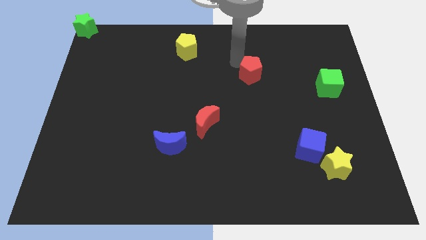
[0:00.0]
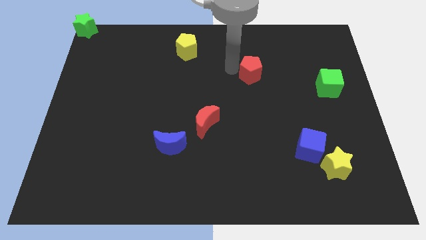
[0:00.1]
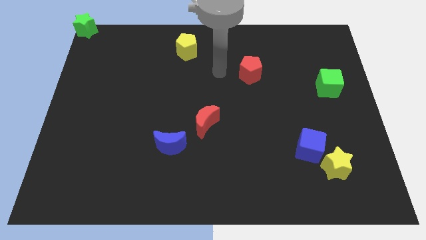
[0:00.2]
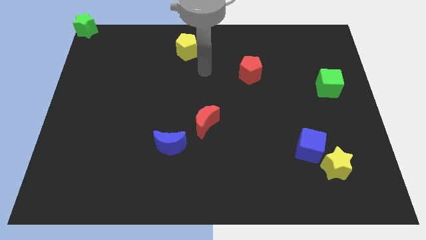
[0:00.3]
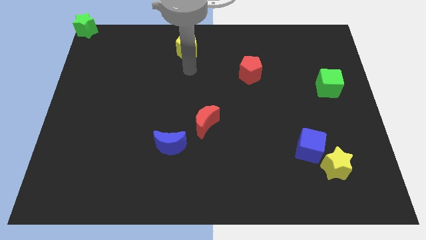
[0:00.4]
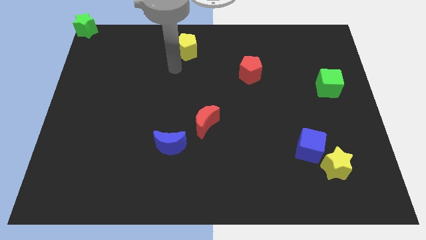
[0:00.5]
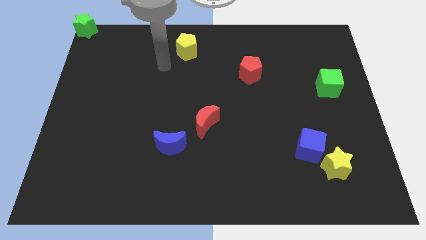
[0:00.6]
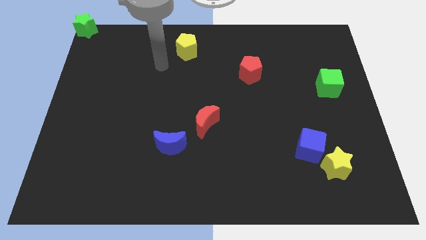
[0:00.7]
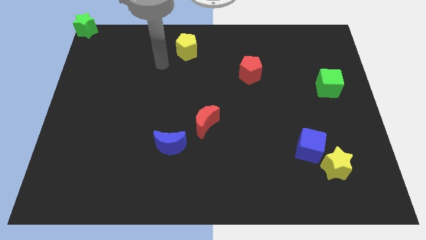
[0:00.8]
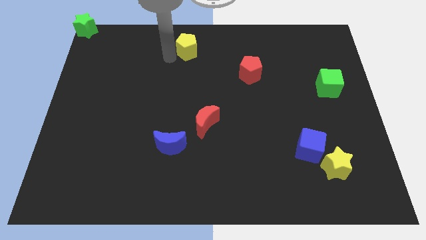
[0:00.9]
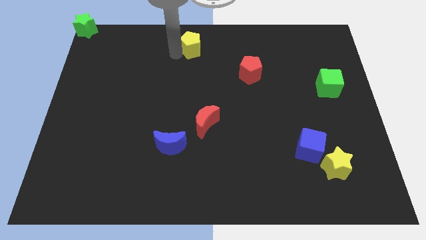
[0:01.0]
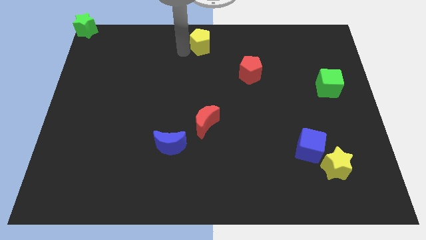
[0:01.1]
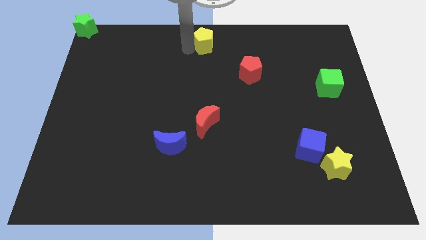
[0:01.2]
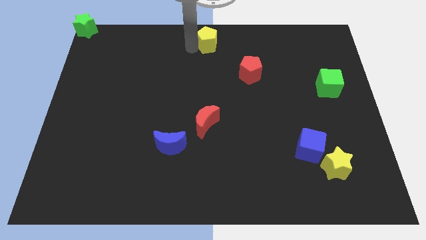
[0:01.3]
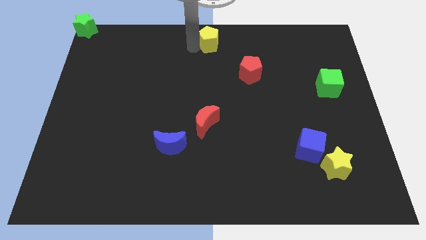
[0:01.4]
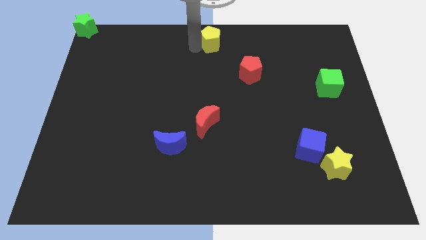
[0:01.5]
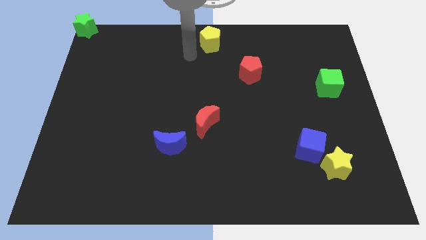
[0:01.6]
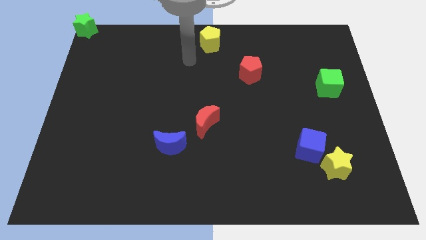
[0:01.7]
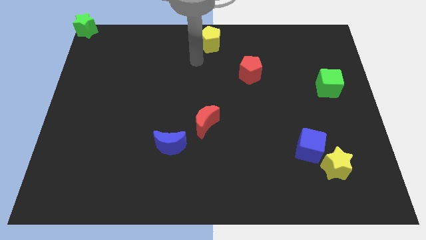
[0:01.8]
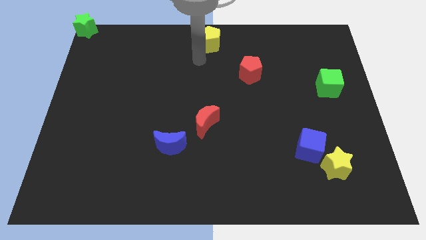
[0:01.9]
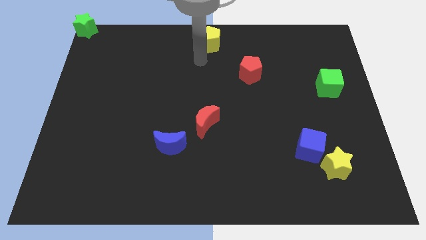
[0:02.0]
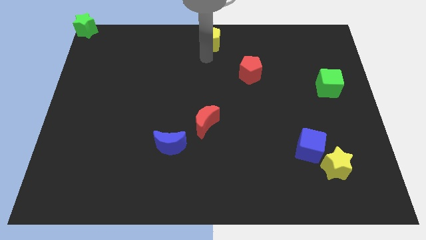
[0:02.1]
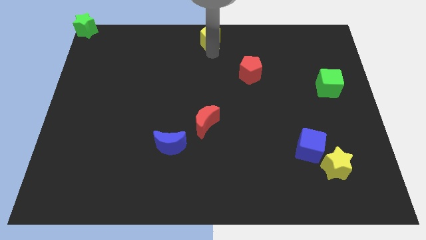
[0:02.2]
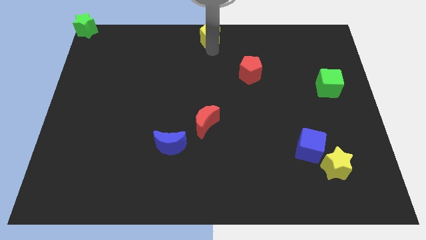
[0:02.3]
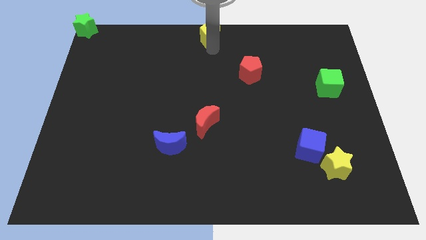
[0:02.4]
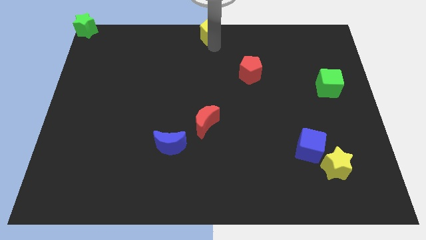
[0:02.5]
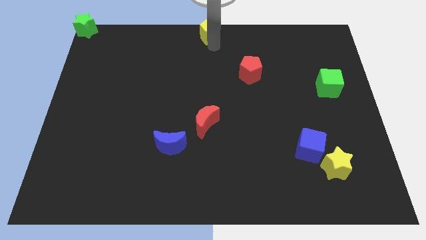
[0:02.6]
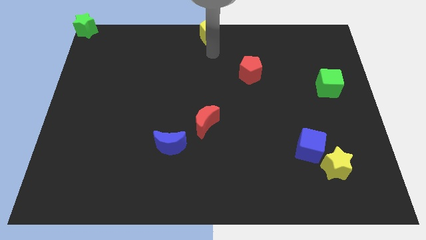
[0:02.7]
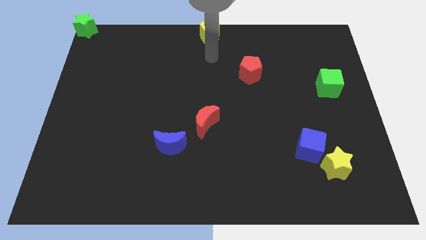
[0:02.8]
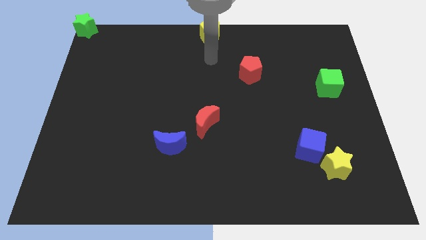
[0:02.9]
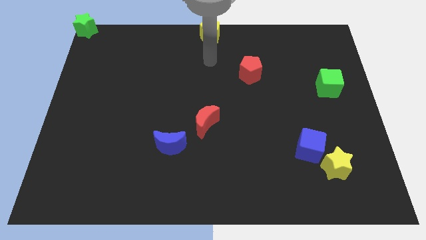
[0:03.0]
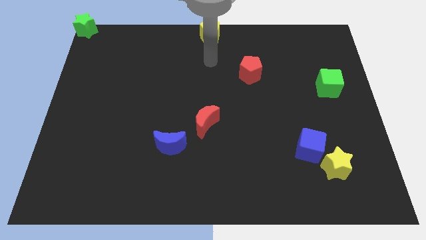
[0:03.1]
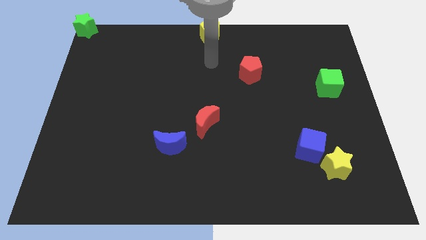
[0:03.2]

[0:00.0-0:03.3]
push the yellow pentagon to the top middle of the board

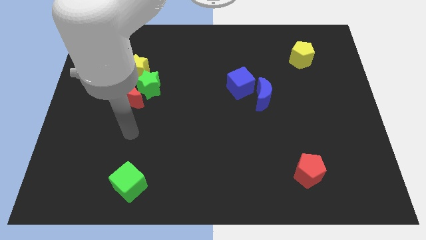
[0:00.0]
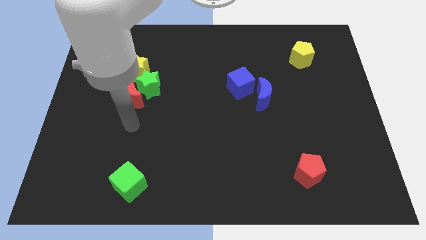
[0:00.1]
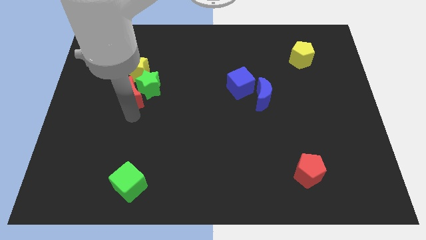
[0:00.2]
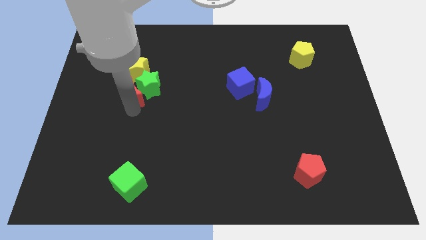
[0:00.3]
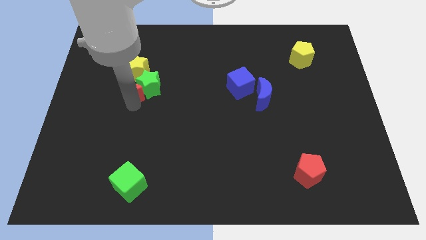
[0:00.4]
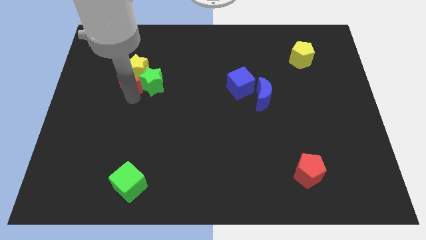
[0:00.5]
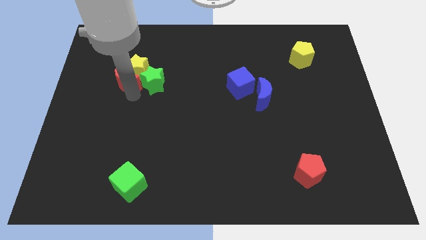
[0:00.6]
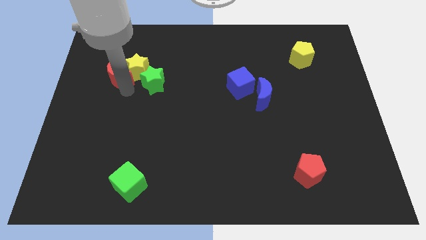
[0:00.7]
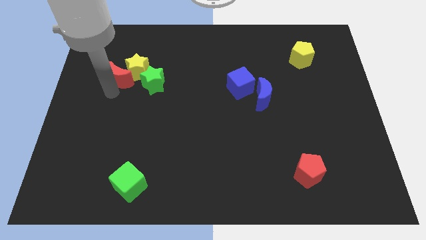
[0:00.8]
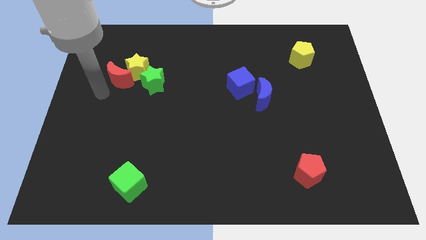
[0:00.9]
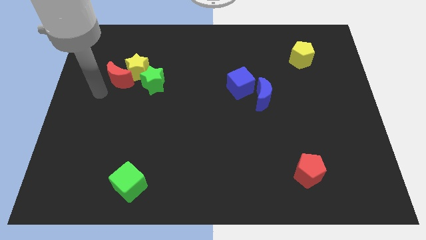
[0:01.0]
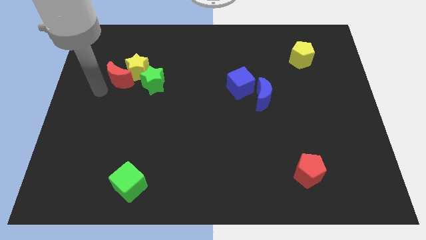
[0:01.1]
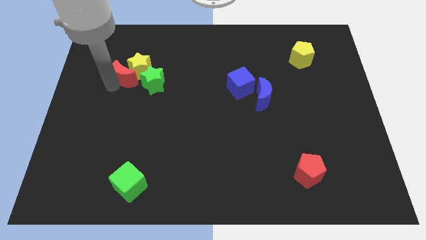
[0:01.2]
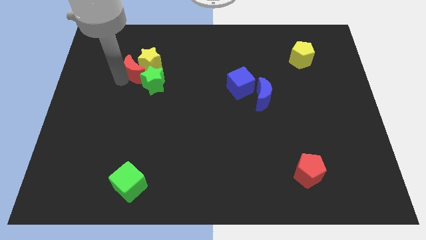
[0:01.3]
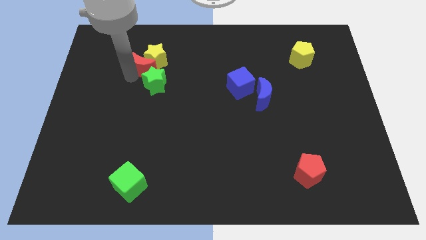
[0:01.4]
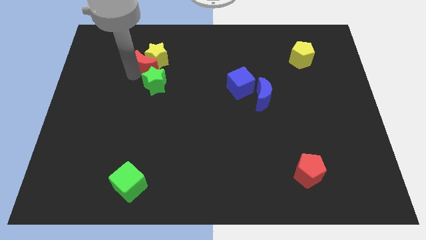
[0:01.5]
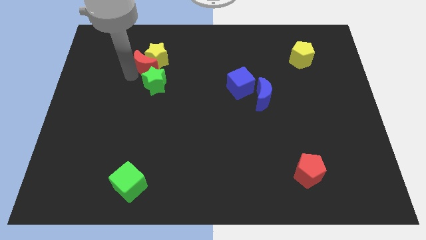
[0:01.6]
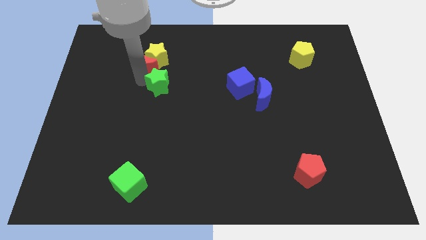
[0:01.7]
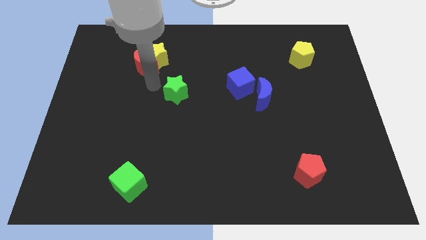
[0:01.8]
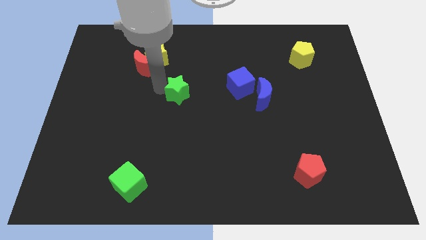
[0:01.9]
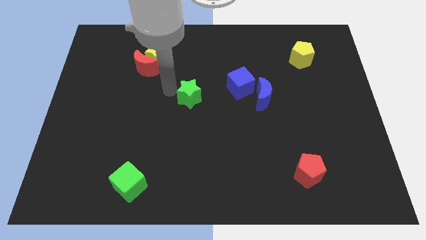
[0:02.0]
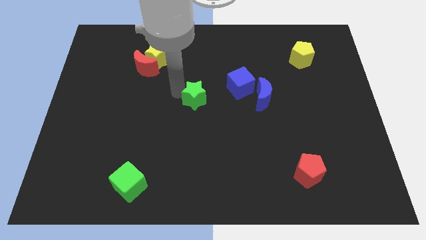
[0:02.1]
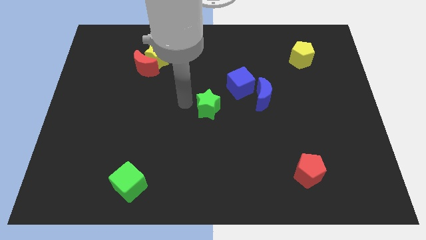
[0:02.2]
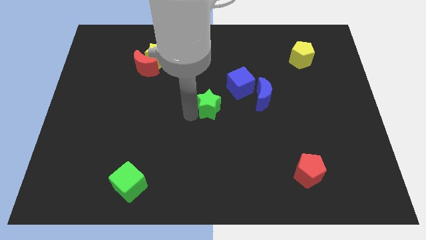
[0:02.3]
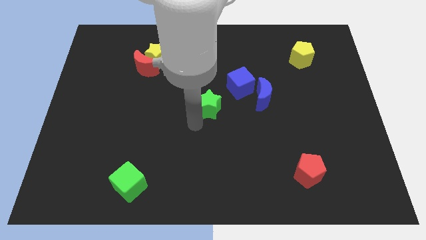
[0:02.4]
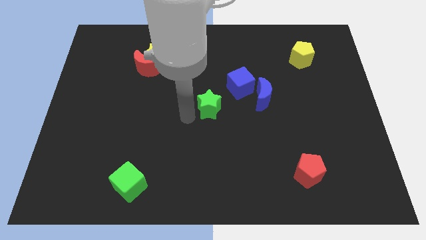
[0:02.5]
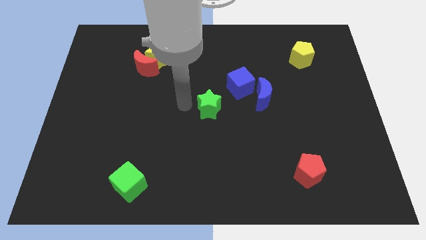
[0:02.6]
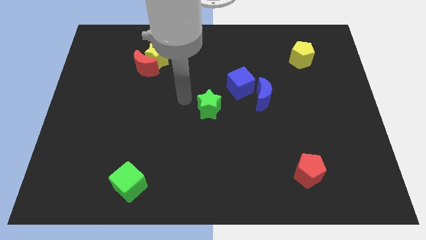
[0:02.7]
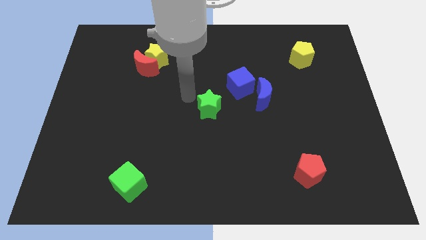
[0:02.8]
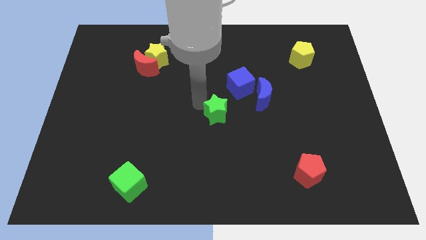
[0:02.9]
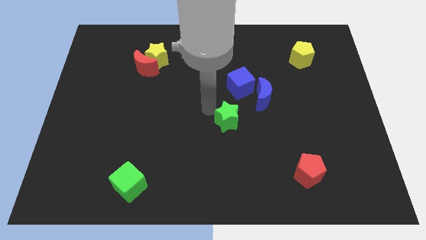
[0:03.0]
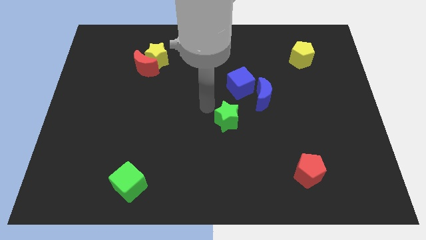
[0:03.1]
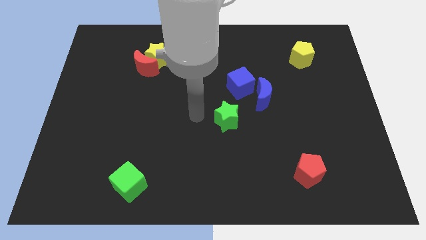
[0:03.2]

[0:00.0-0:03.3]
move the green star away from the red moon and yellow star

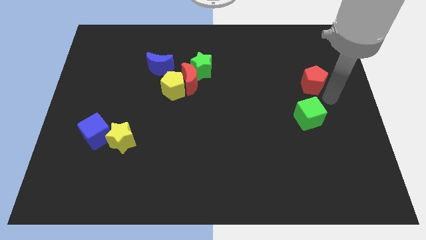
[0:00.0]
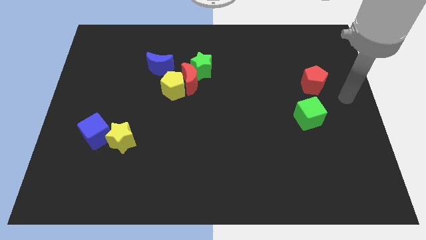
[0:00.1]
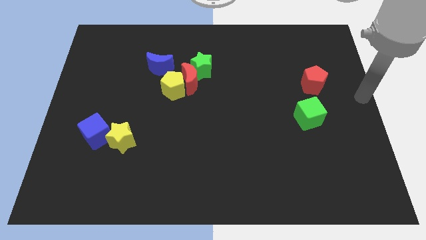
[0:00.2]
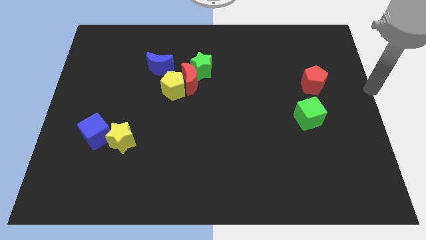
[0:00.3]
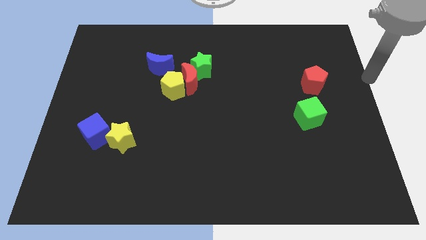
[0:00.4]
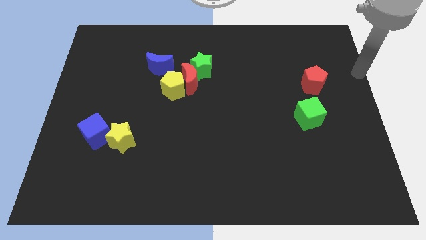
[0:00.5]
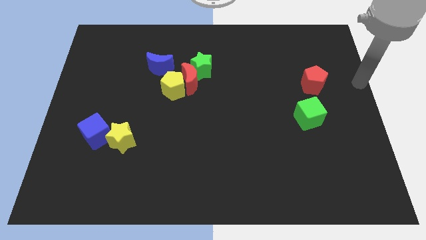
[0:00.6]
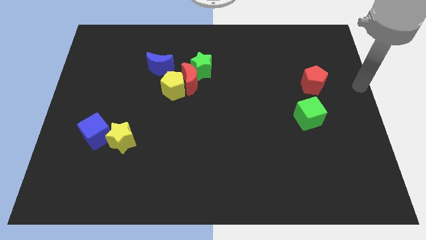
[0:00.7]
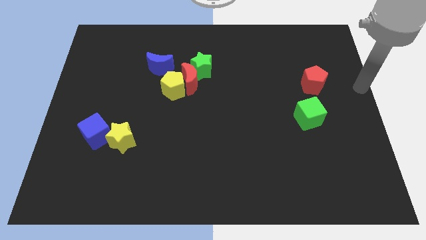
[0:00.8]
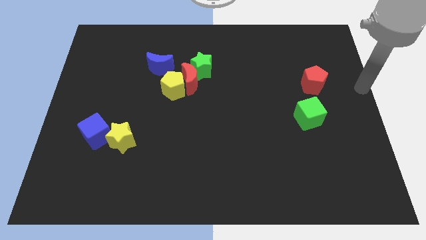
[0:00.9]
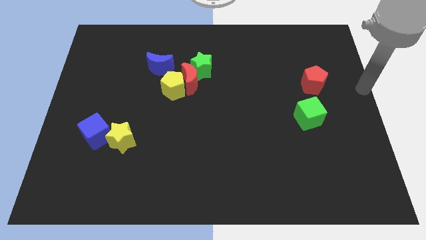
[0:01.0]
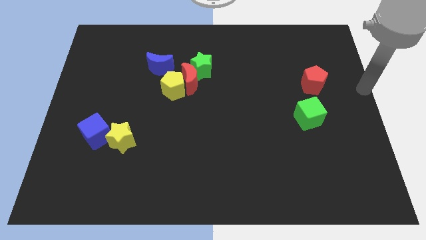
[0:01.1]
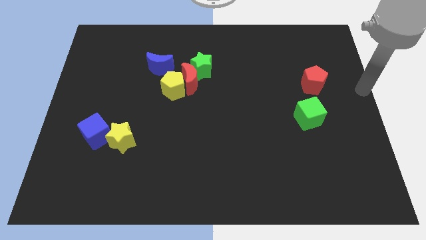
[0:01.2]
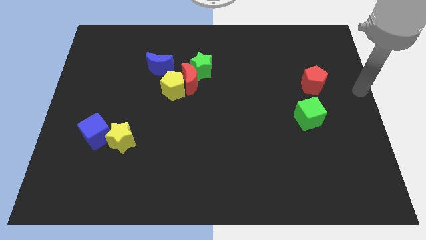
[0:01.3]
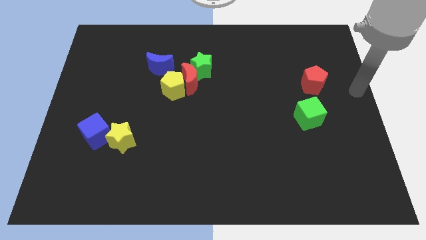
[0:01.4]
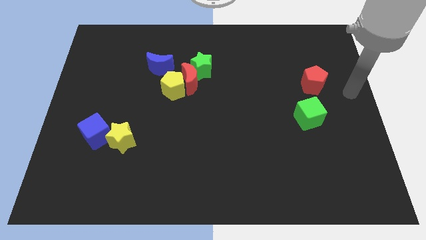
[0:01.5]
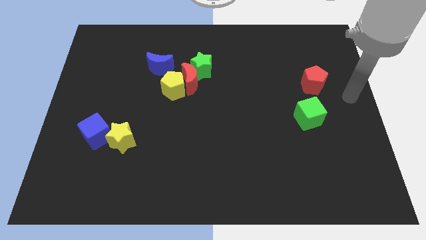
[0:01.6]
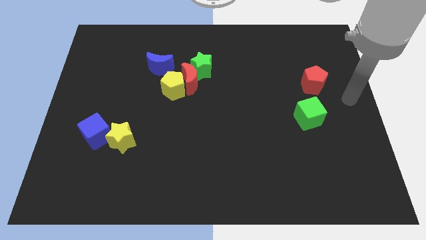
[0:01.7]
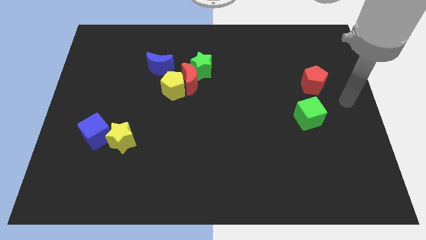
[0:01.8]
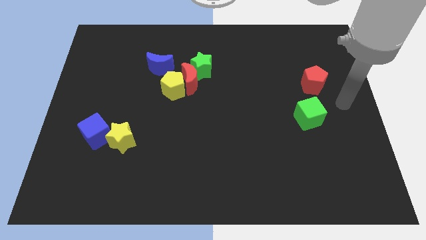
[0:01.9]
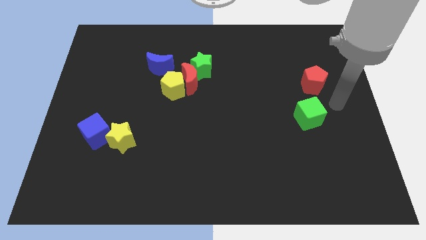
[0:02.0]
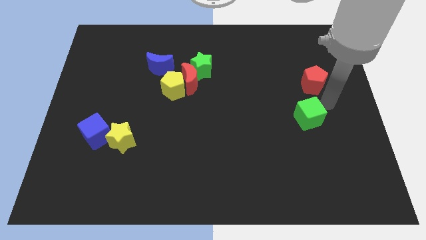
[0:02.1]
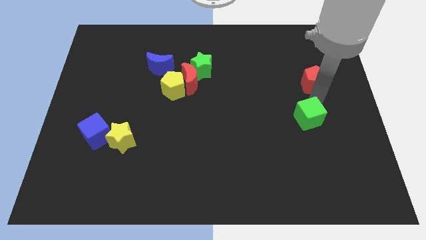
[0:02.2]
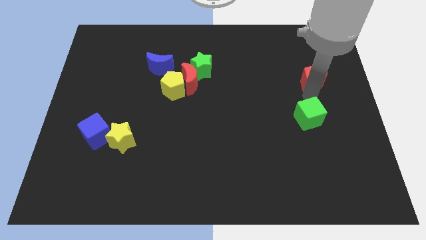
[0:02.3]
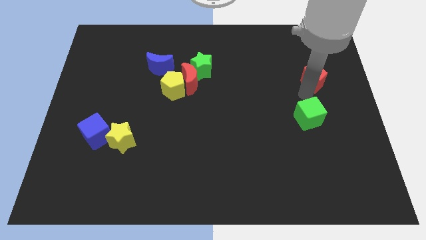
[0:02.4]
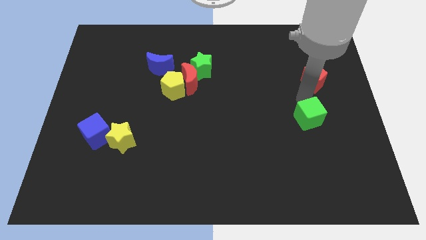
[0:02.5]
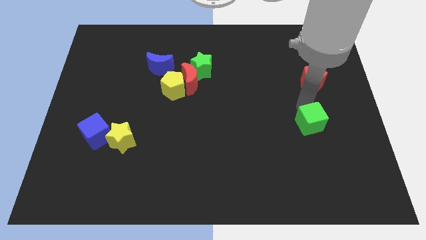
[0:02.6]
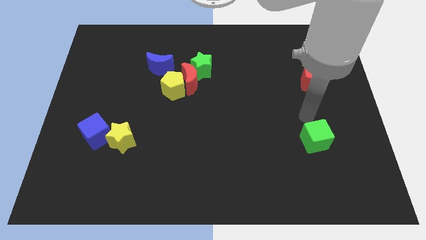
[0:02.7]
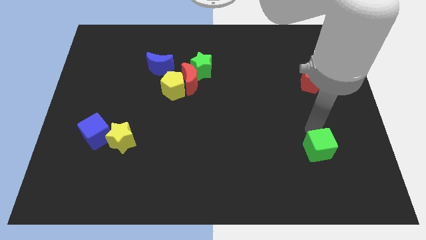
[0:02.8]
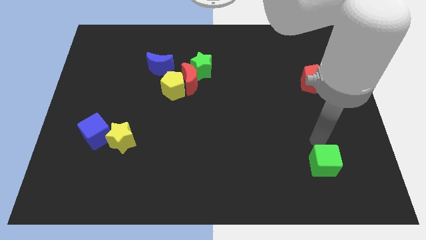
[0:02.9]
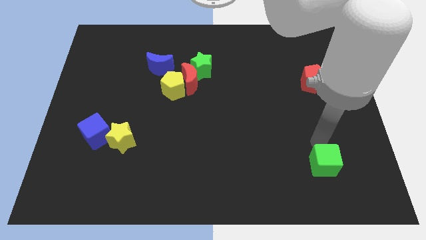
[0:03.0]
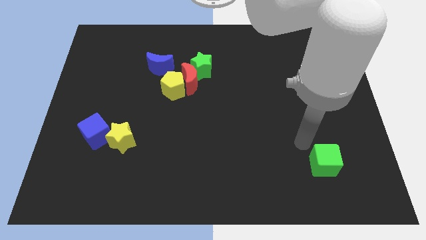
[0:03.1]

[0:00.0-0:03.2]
push the green cube to the bottom of the board
